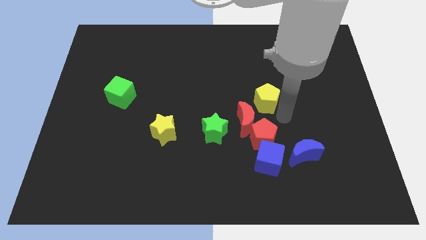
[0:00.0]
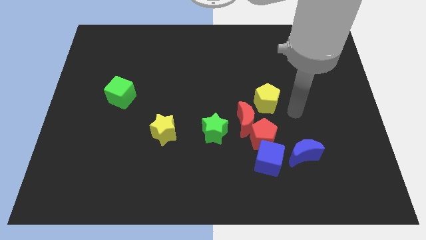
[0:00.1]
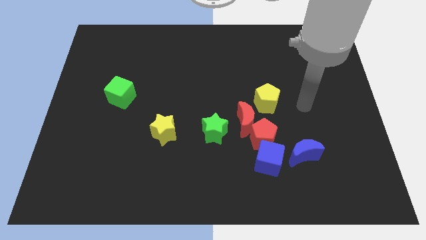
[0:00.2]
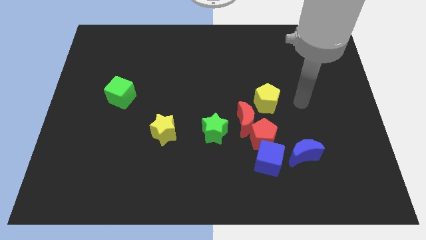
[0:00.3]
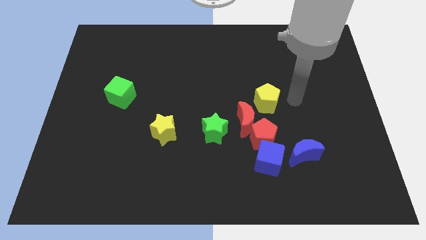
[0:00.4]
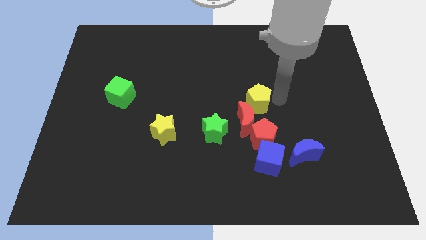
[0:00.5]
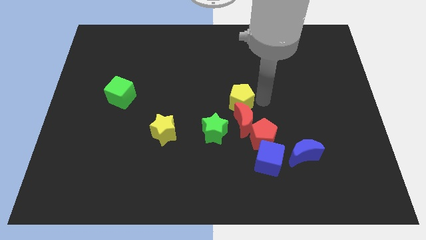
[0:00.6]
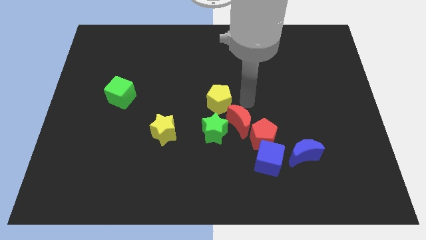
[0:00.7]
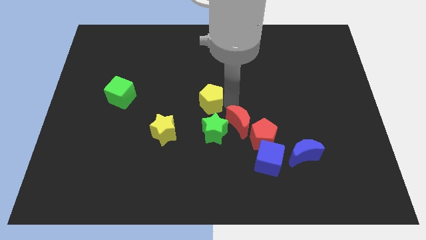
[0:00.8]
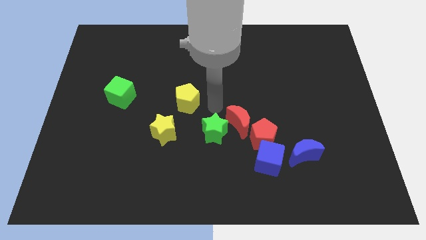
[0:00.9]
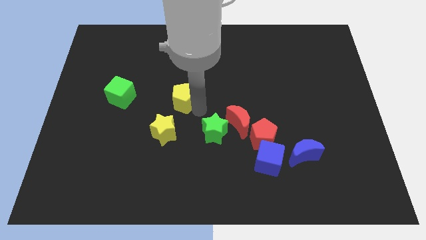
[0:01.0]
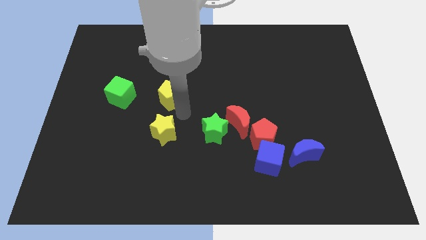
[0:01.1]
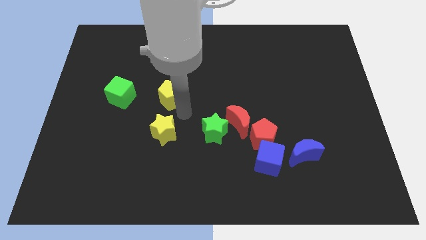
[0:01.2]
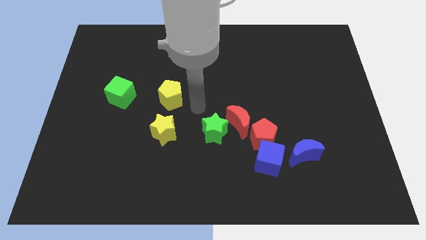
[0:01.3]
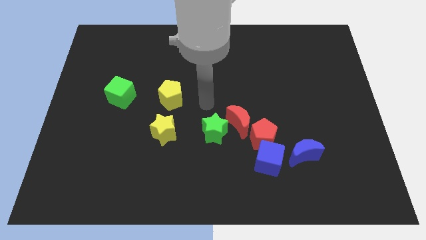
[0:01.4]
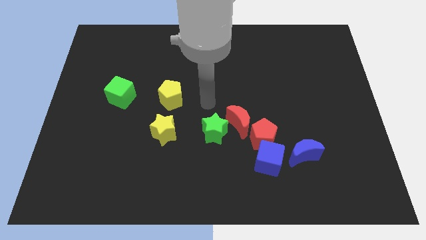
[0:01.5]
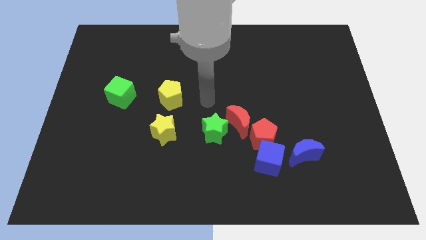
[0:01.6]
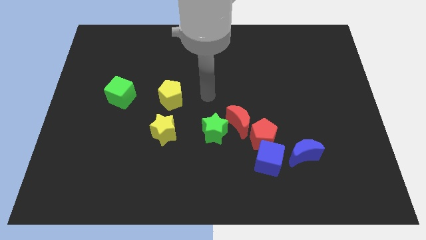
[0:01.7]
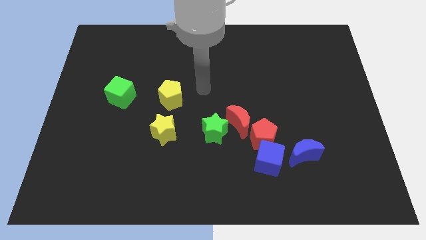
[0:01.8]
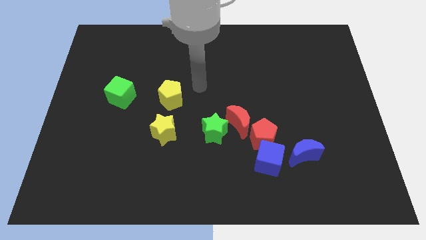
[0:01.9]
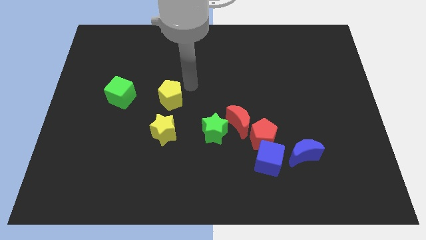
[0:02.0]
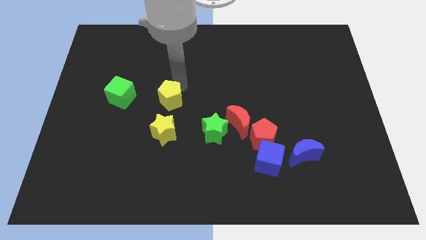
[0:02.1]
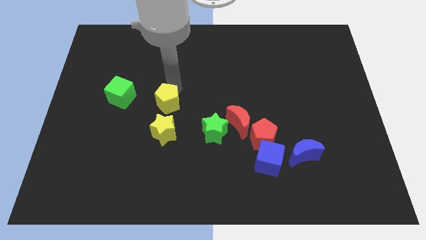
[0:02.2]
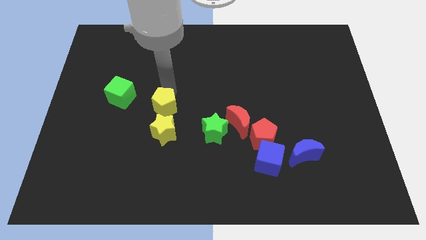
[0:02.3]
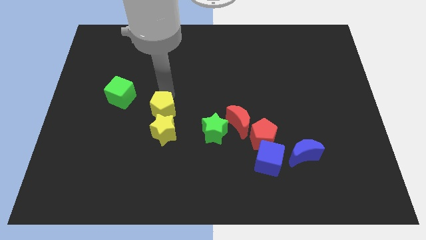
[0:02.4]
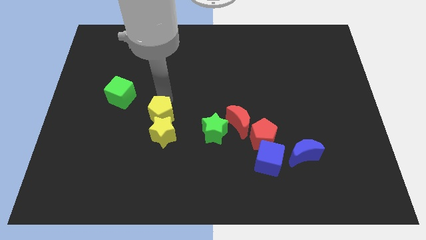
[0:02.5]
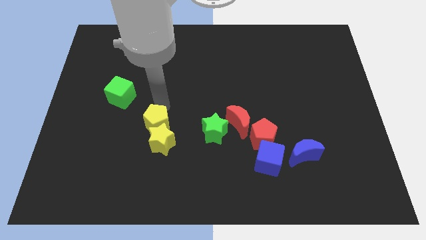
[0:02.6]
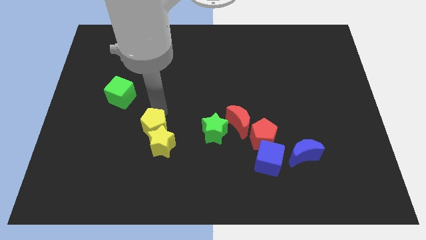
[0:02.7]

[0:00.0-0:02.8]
push the yellow pentagon into the yellow star

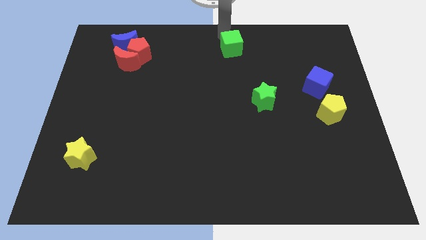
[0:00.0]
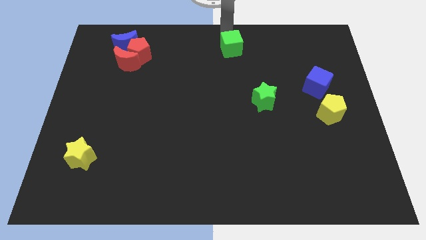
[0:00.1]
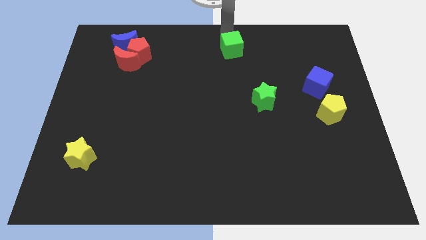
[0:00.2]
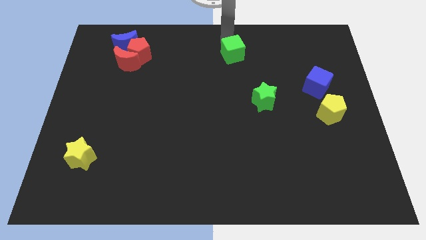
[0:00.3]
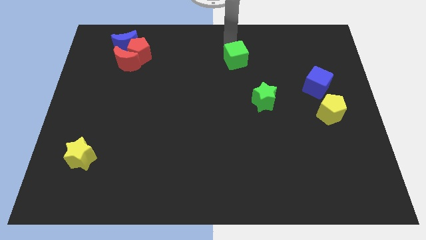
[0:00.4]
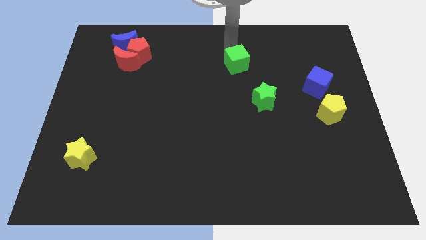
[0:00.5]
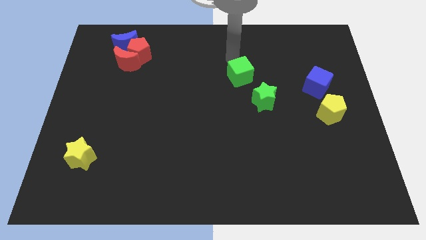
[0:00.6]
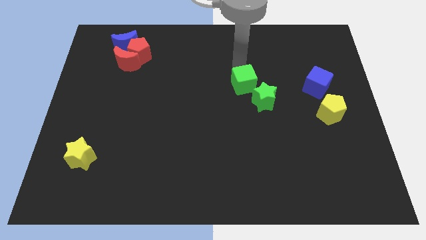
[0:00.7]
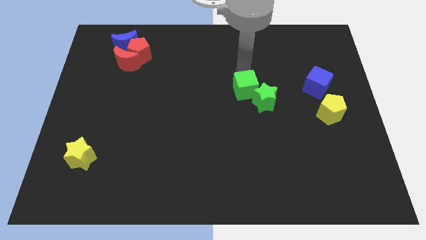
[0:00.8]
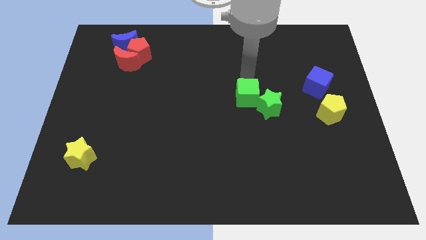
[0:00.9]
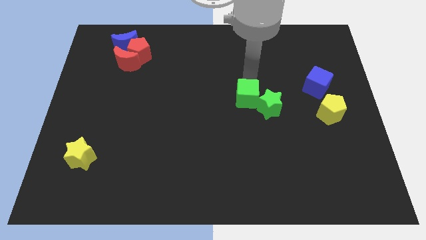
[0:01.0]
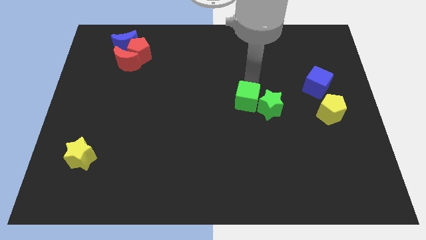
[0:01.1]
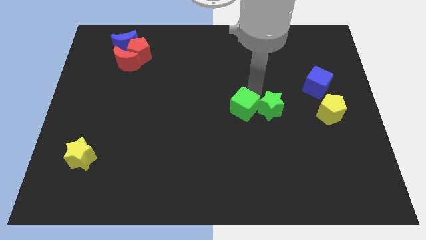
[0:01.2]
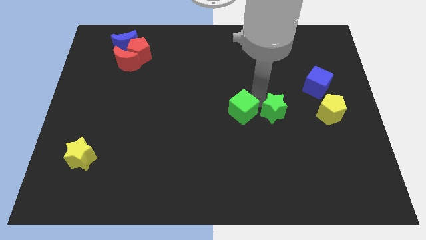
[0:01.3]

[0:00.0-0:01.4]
push the green cube to the left side of the green star

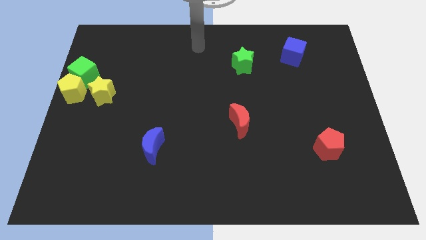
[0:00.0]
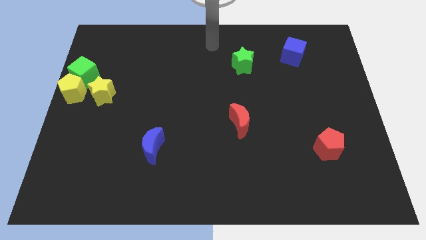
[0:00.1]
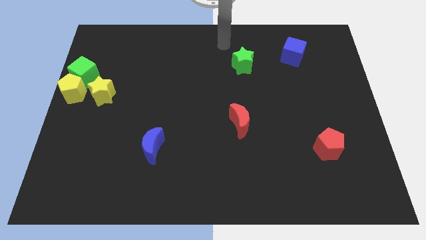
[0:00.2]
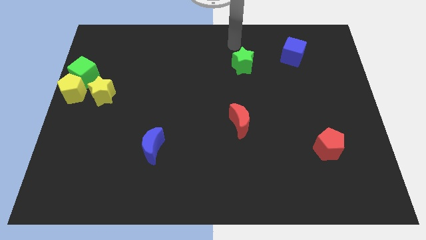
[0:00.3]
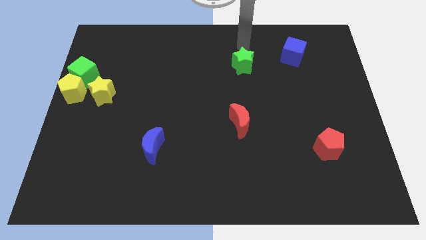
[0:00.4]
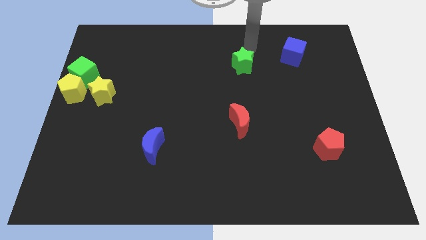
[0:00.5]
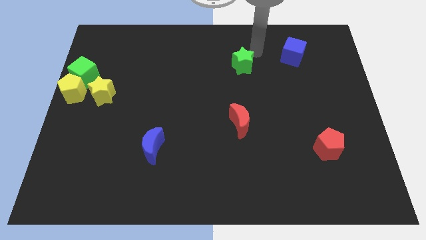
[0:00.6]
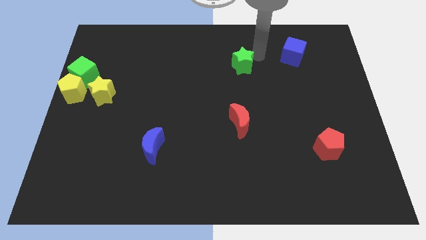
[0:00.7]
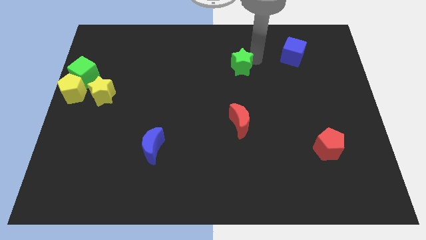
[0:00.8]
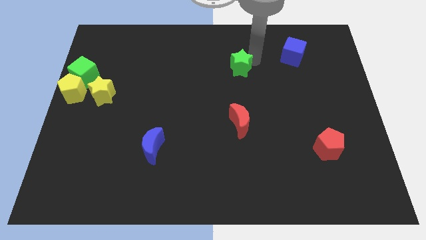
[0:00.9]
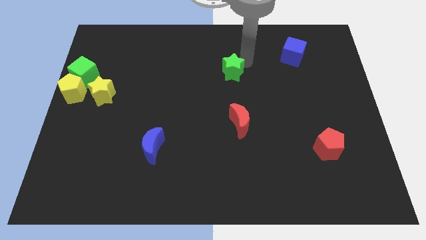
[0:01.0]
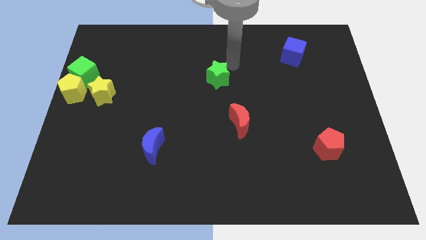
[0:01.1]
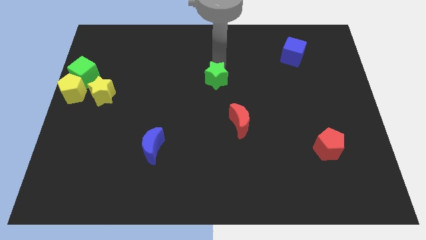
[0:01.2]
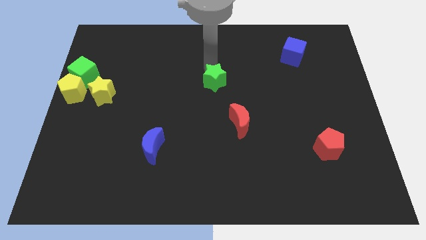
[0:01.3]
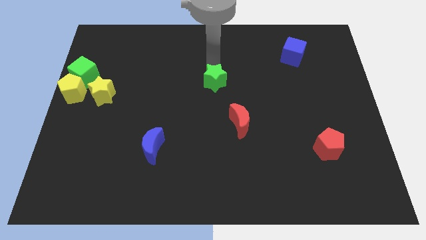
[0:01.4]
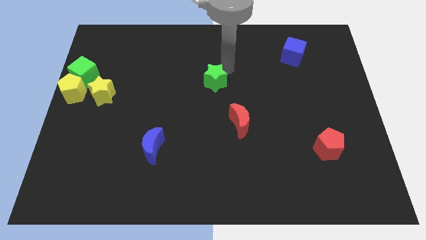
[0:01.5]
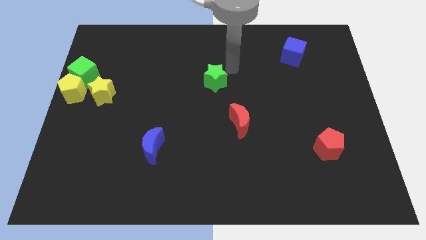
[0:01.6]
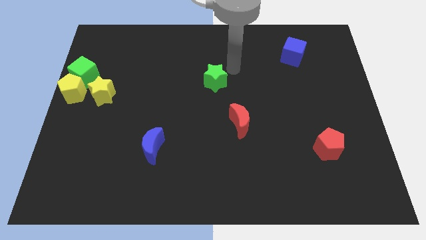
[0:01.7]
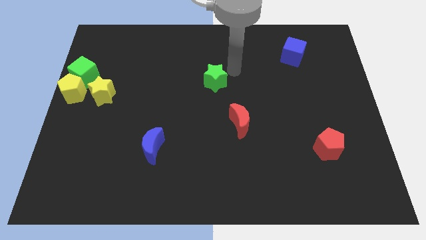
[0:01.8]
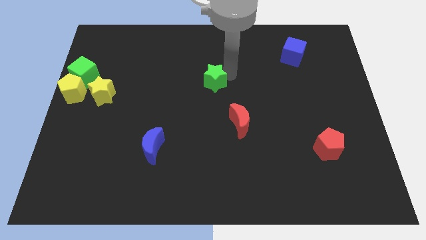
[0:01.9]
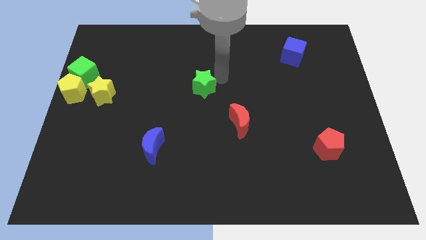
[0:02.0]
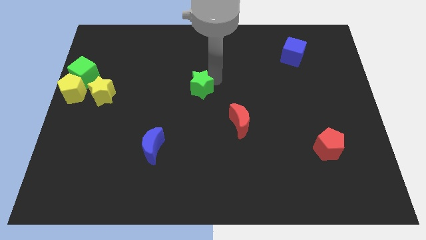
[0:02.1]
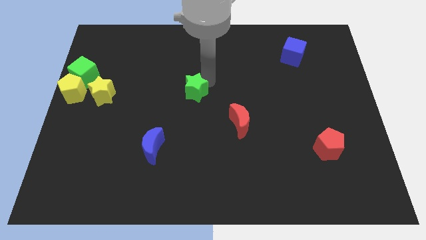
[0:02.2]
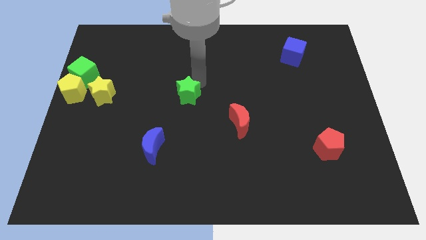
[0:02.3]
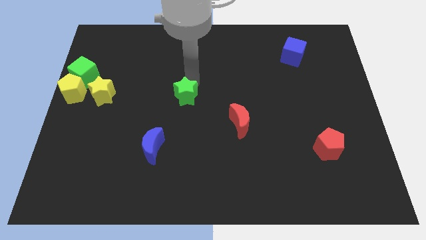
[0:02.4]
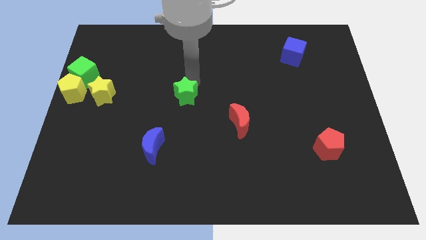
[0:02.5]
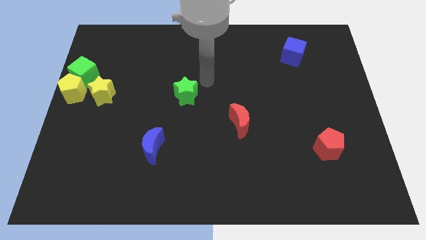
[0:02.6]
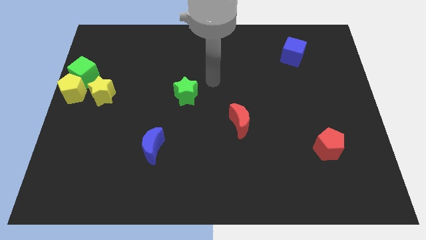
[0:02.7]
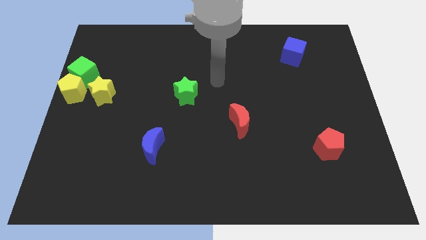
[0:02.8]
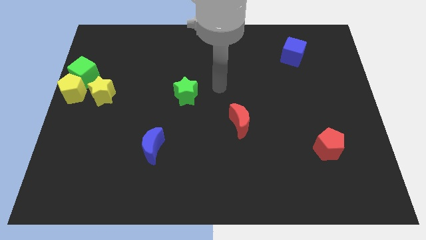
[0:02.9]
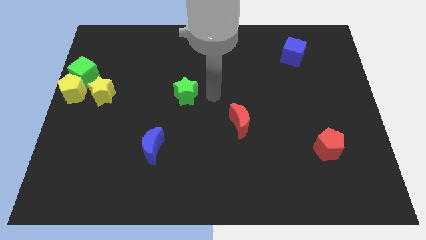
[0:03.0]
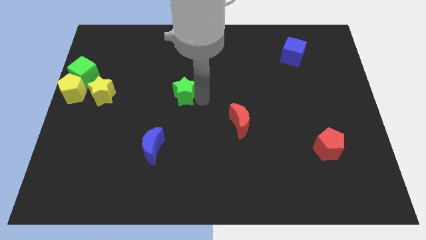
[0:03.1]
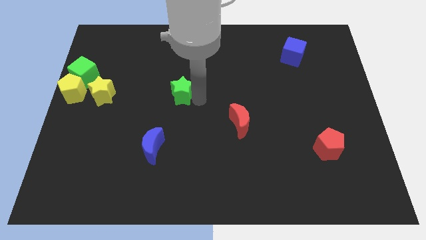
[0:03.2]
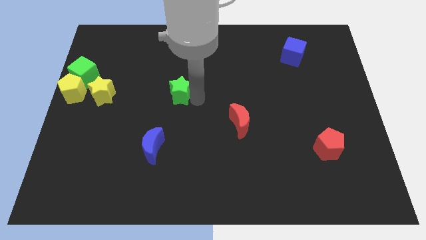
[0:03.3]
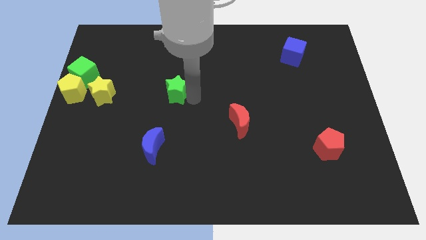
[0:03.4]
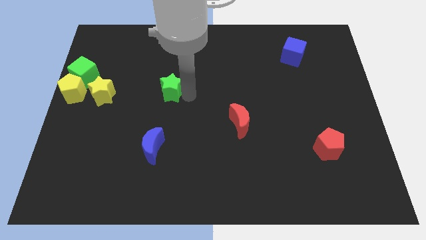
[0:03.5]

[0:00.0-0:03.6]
move the green star towards the yellow star at the right

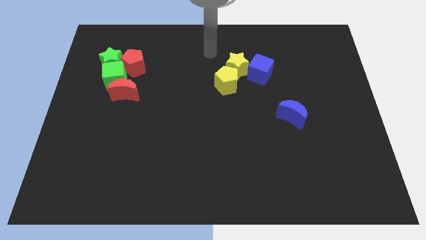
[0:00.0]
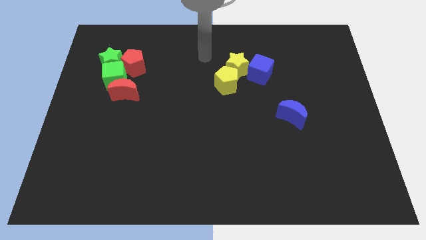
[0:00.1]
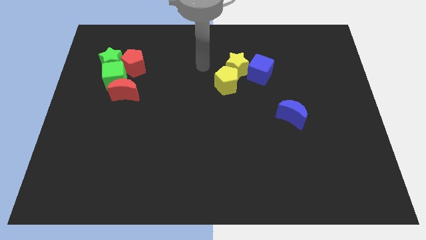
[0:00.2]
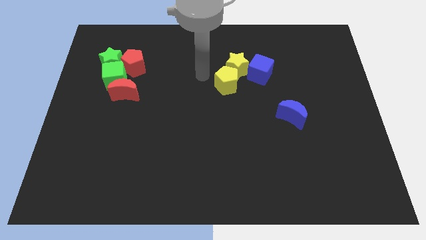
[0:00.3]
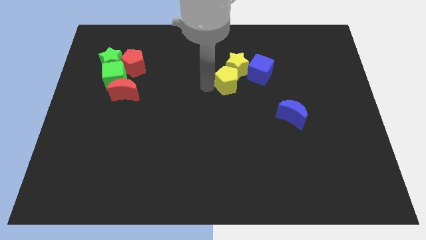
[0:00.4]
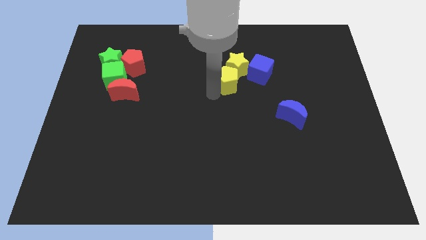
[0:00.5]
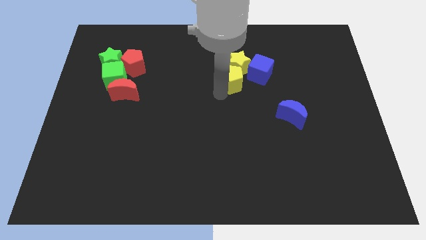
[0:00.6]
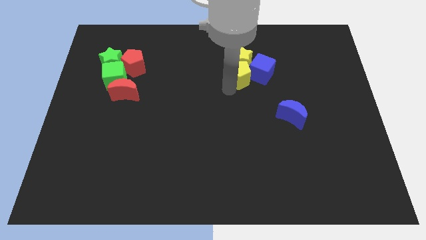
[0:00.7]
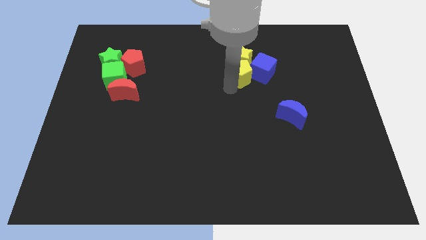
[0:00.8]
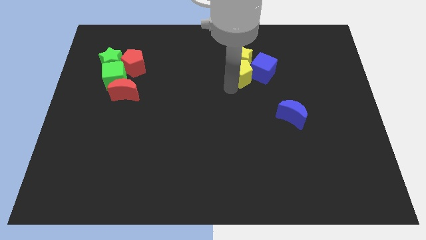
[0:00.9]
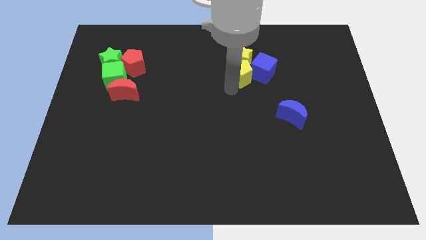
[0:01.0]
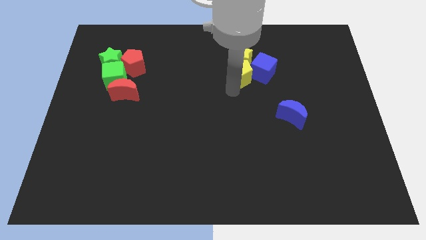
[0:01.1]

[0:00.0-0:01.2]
slide yellow pentagon into blue cube
